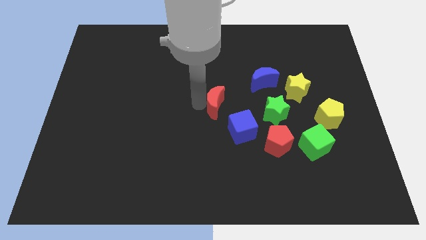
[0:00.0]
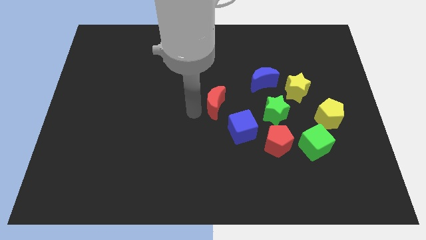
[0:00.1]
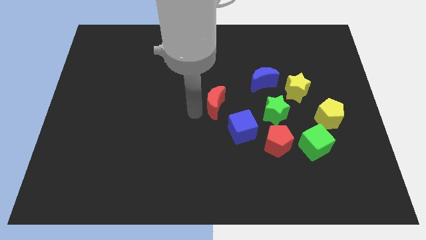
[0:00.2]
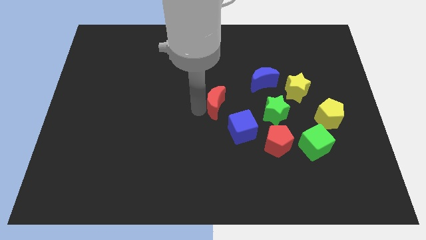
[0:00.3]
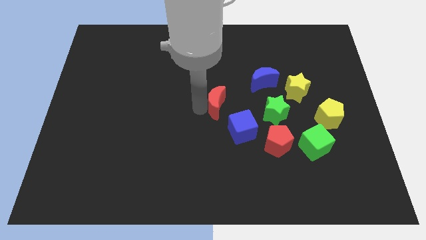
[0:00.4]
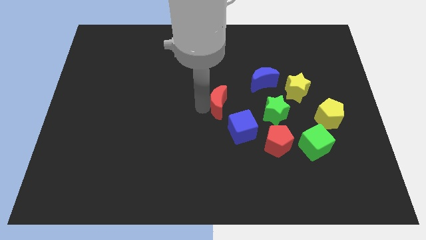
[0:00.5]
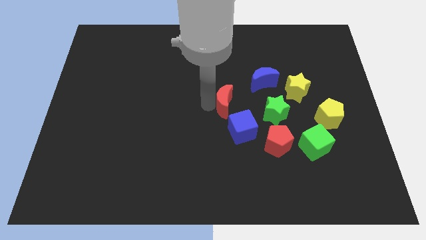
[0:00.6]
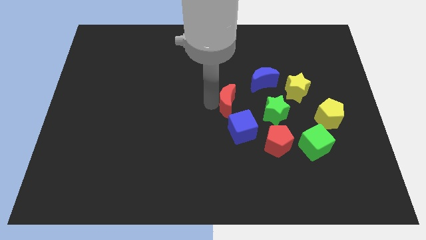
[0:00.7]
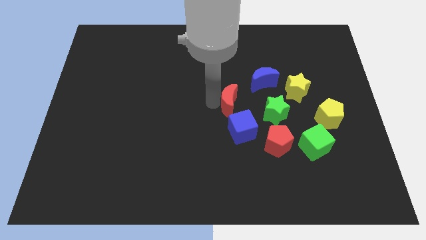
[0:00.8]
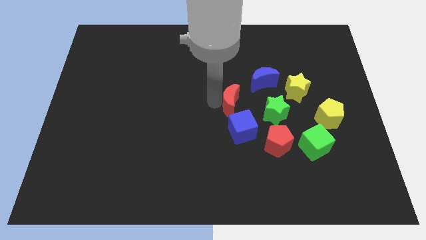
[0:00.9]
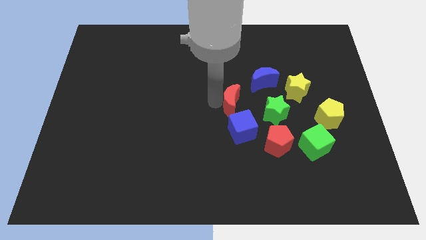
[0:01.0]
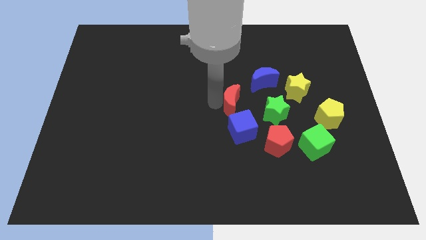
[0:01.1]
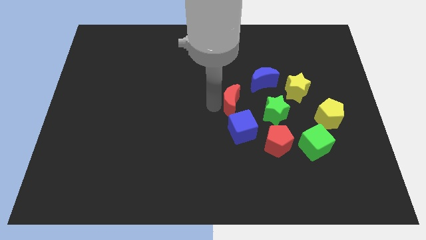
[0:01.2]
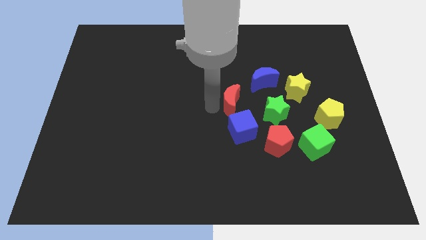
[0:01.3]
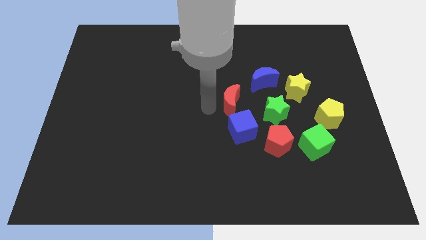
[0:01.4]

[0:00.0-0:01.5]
push red crescent above blue cube

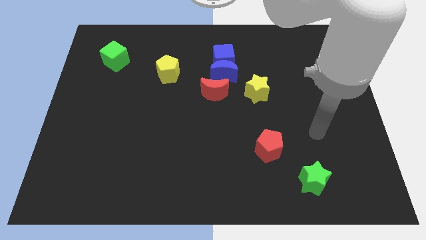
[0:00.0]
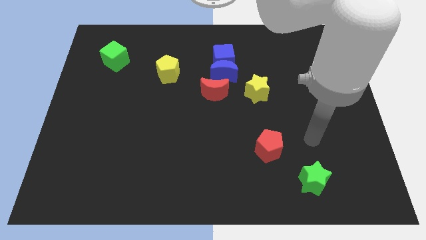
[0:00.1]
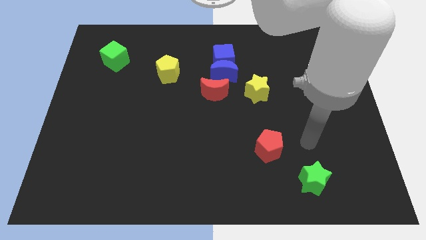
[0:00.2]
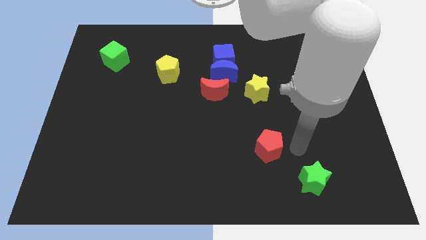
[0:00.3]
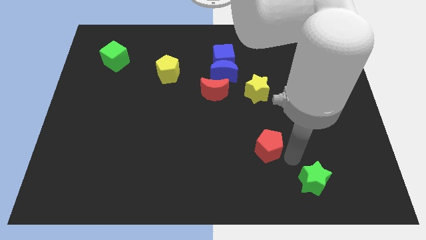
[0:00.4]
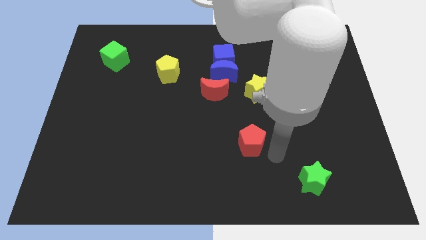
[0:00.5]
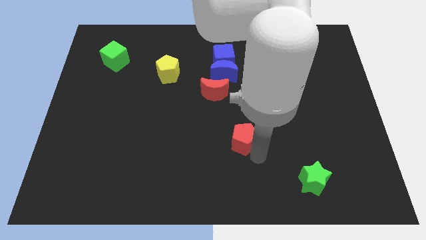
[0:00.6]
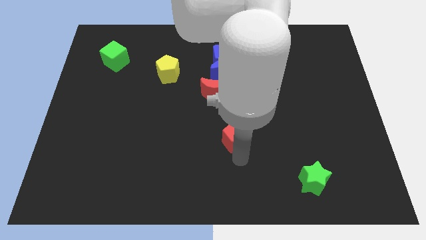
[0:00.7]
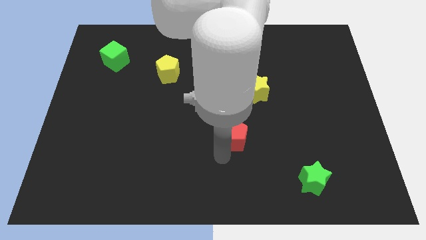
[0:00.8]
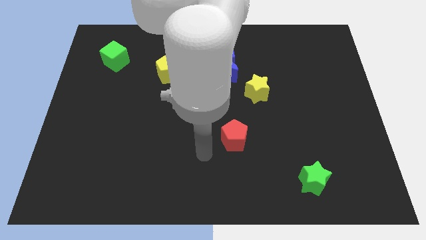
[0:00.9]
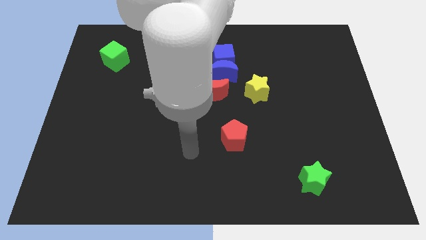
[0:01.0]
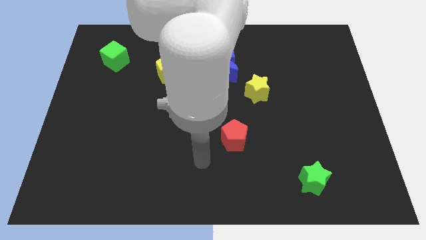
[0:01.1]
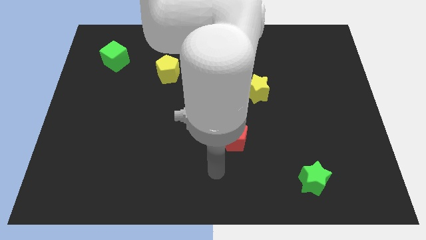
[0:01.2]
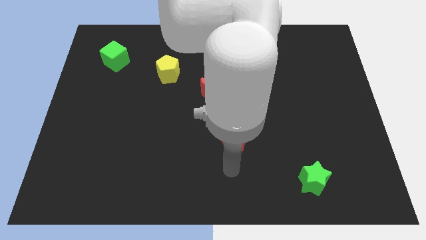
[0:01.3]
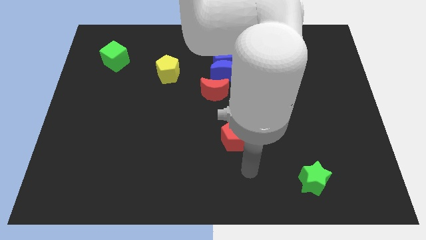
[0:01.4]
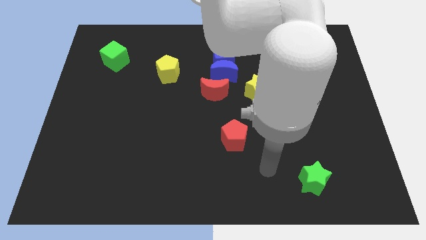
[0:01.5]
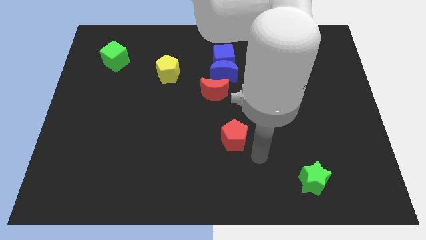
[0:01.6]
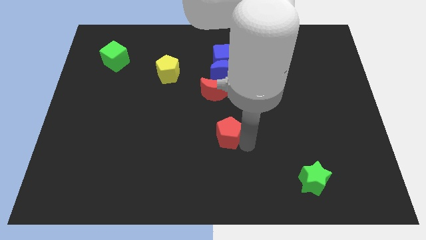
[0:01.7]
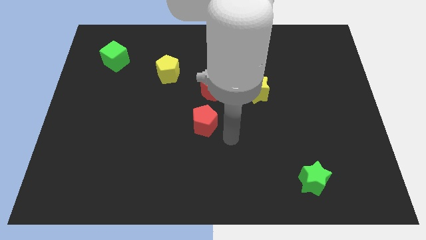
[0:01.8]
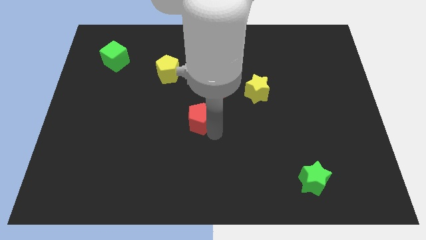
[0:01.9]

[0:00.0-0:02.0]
push the red pentagon towards the center of the board

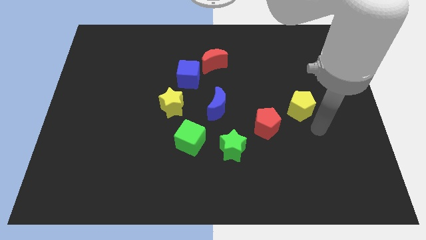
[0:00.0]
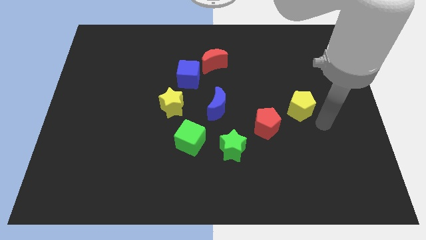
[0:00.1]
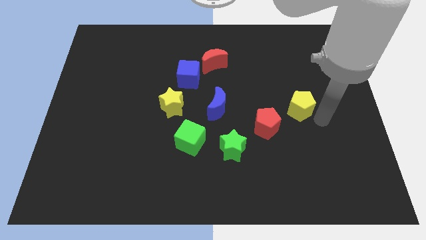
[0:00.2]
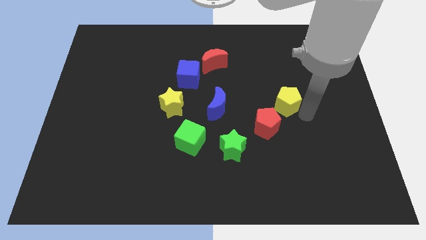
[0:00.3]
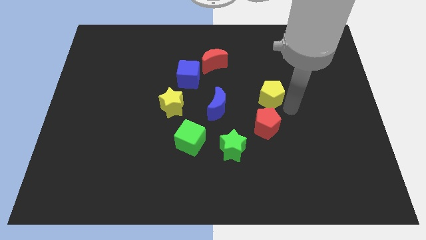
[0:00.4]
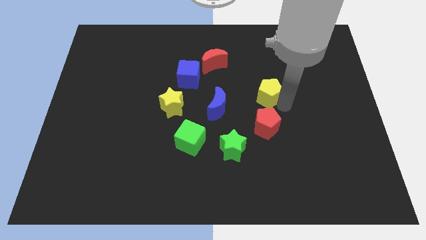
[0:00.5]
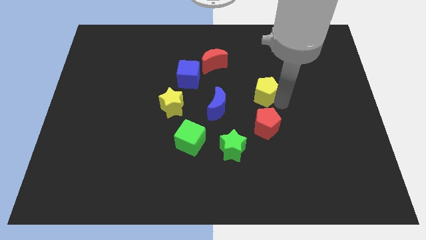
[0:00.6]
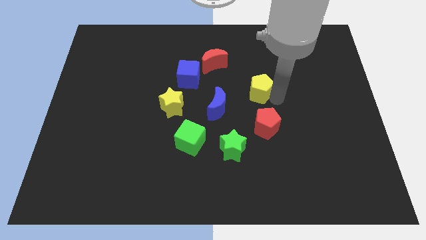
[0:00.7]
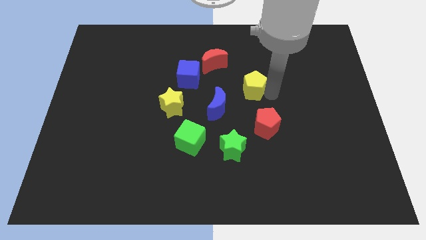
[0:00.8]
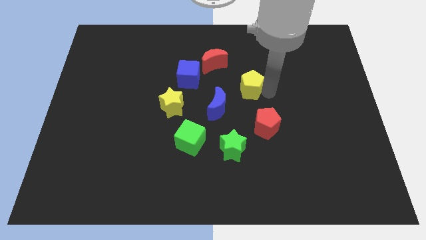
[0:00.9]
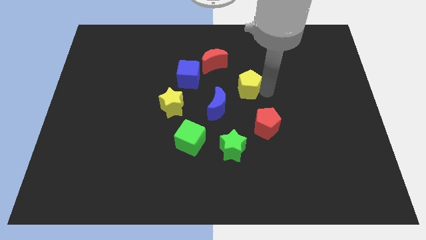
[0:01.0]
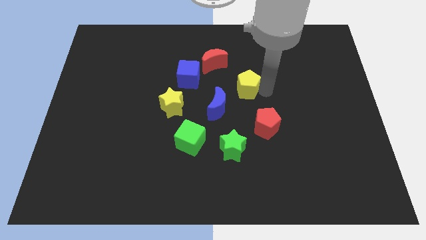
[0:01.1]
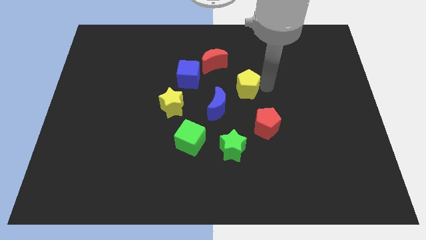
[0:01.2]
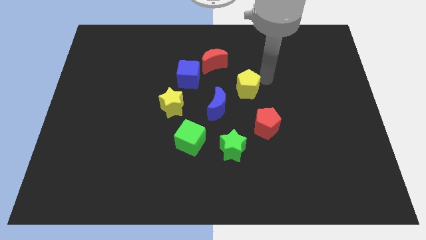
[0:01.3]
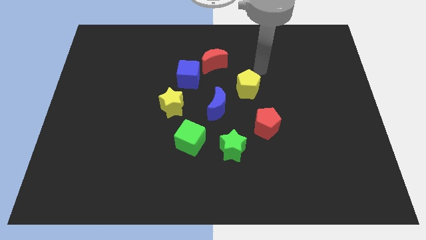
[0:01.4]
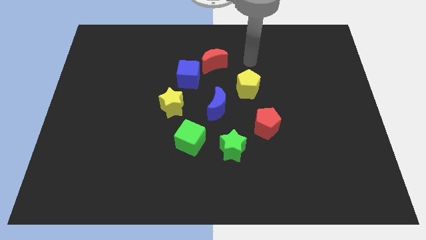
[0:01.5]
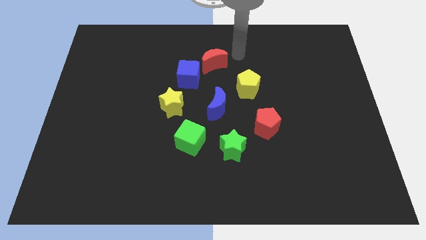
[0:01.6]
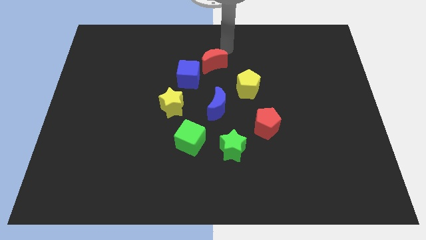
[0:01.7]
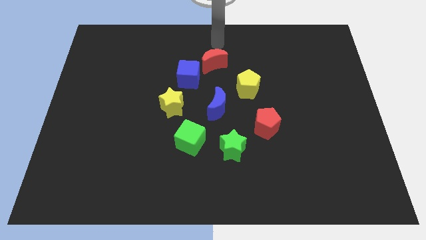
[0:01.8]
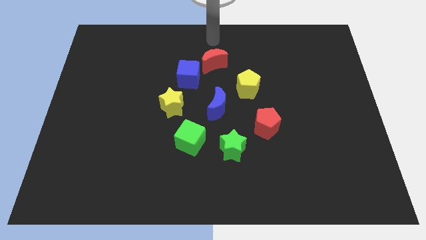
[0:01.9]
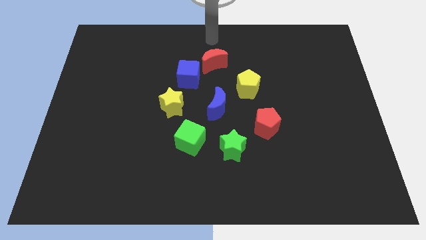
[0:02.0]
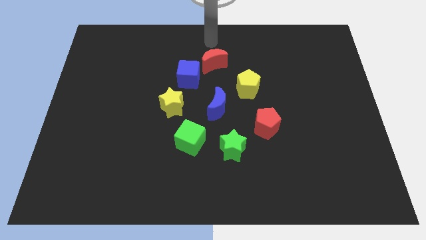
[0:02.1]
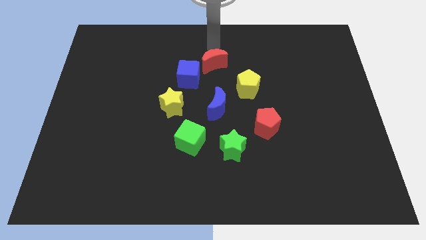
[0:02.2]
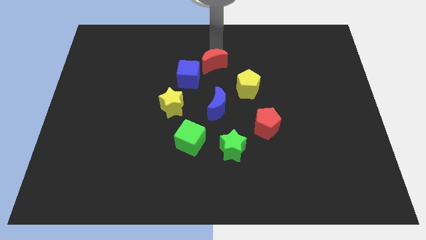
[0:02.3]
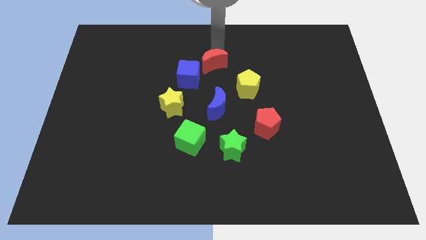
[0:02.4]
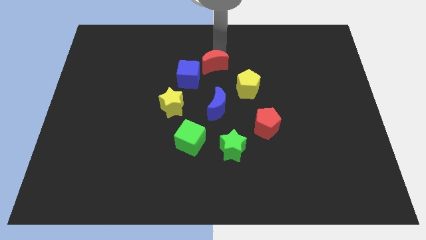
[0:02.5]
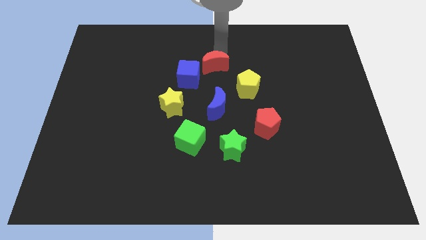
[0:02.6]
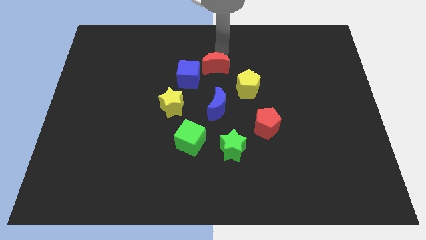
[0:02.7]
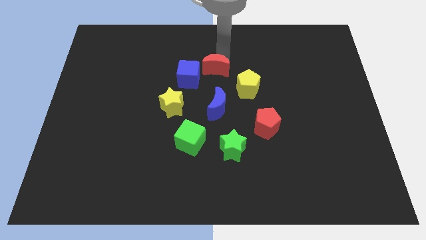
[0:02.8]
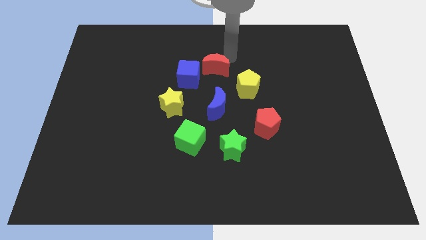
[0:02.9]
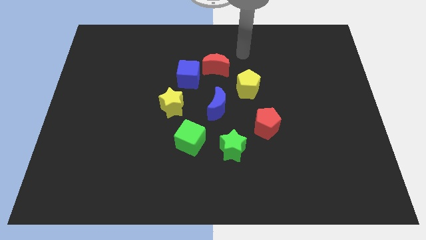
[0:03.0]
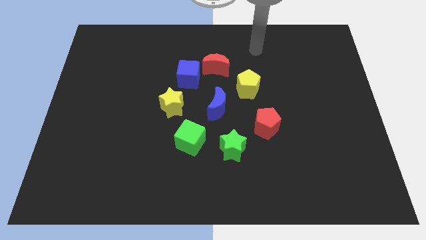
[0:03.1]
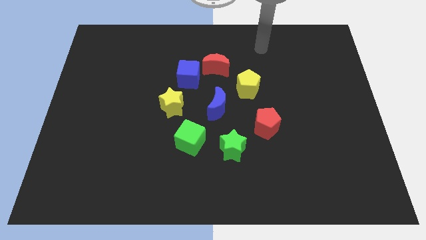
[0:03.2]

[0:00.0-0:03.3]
adjust the yellow pentagon and red crescent to form a circle with all other blocks

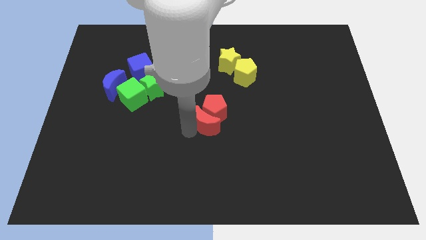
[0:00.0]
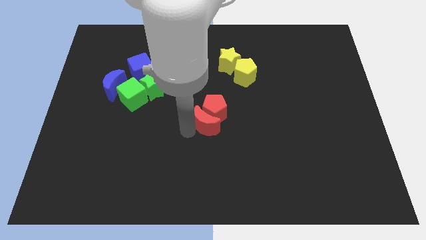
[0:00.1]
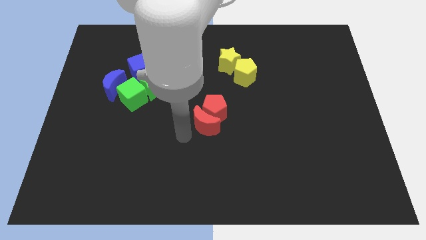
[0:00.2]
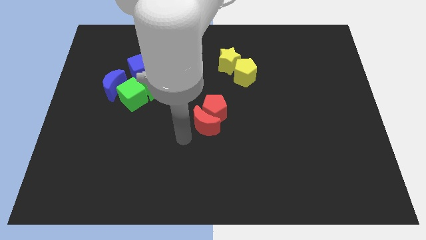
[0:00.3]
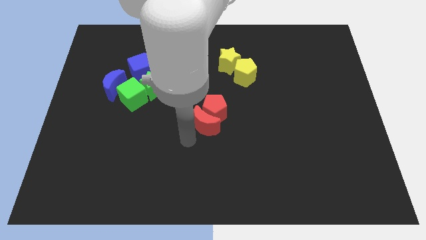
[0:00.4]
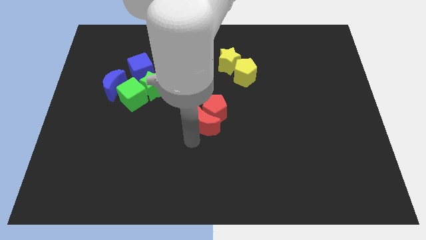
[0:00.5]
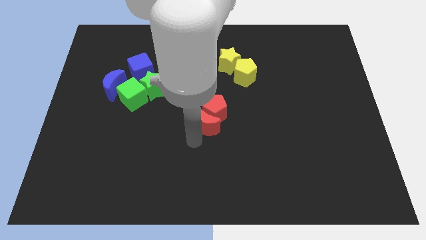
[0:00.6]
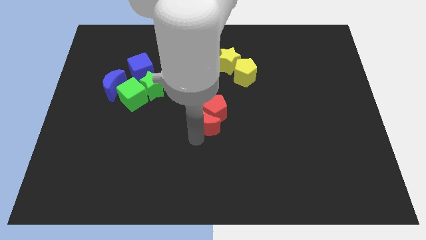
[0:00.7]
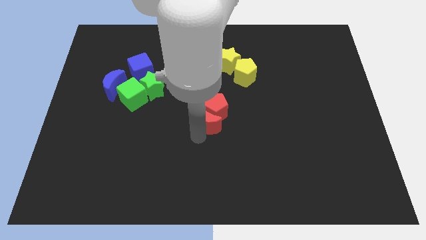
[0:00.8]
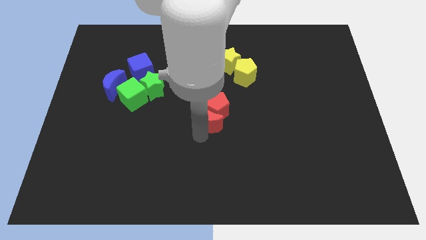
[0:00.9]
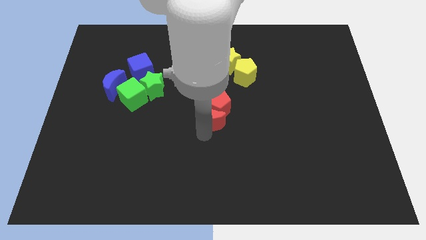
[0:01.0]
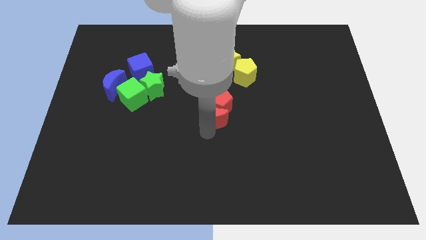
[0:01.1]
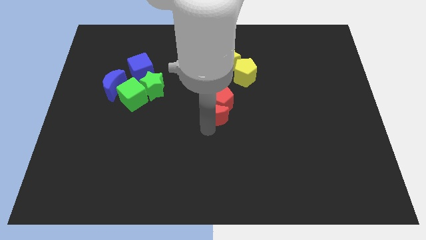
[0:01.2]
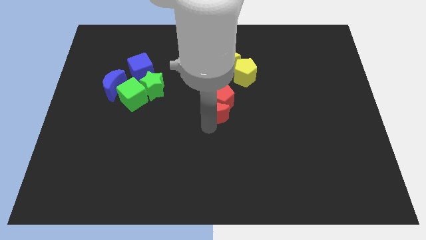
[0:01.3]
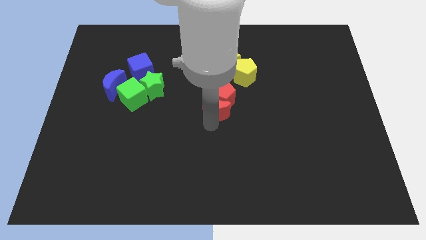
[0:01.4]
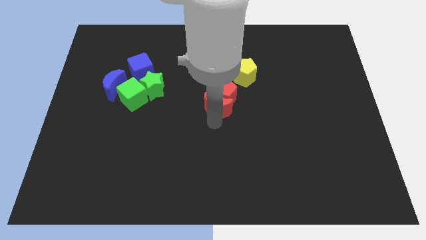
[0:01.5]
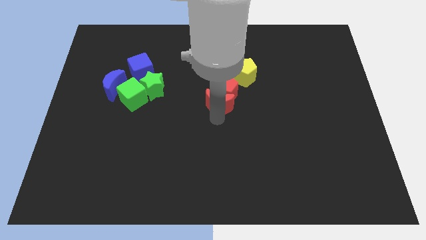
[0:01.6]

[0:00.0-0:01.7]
push the red blocks towards the yellow blocks

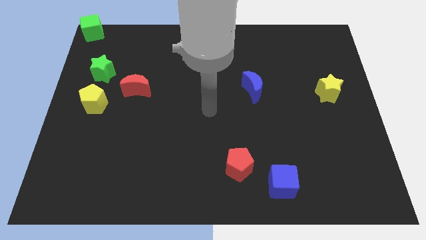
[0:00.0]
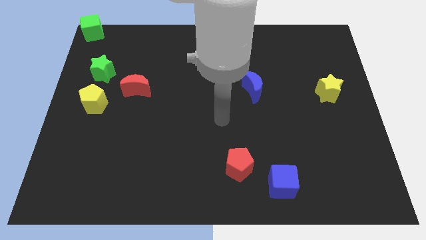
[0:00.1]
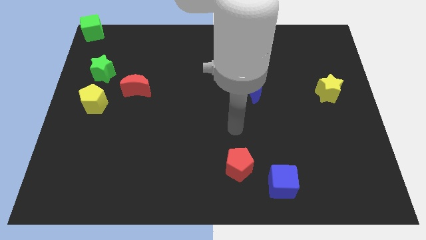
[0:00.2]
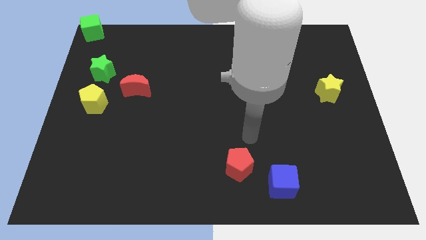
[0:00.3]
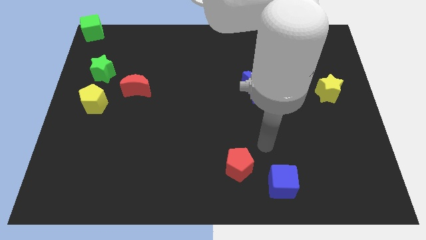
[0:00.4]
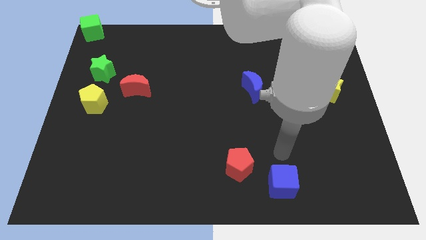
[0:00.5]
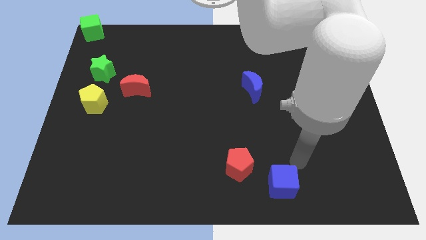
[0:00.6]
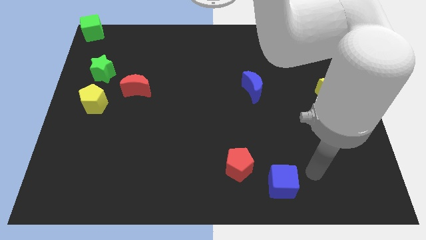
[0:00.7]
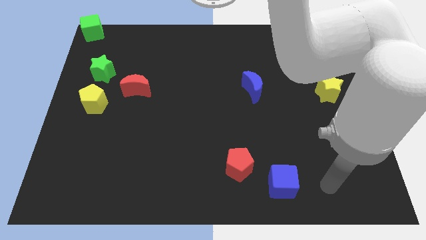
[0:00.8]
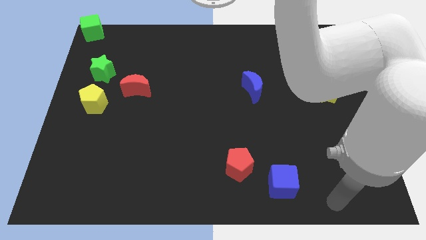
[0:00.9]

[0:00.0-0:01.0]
move the arm right to the blue cube
